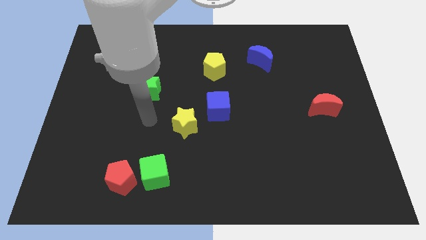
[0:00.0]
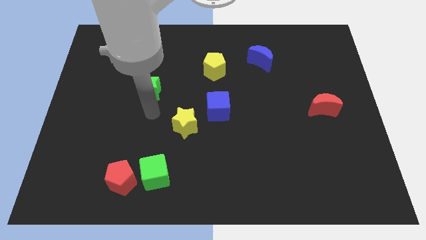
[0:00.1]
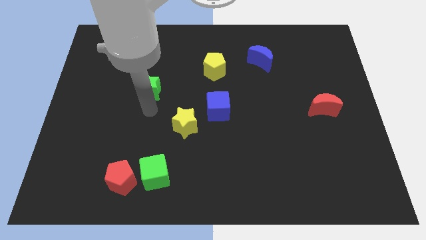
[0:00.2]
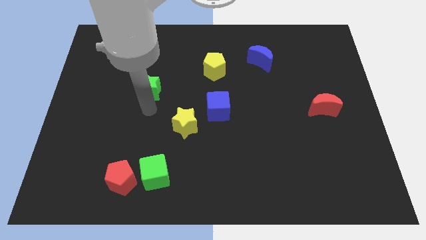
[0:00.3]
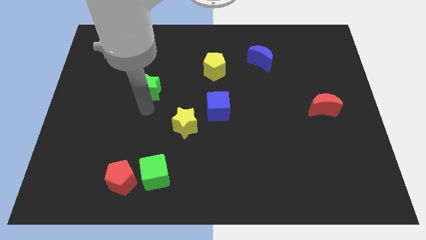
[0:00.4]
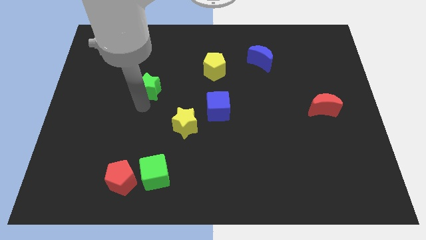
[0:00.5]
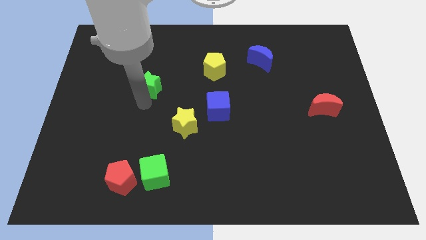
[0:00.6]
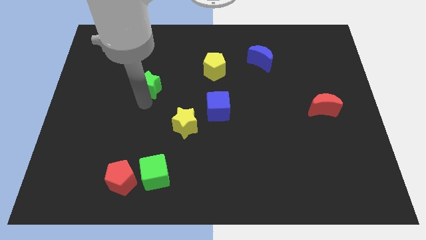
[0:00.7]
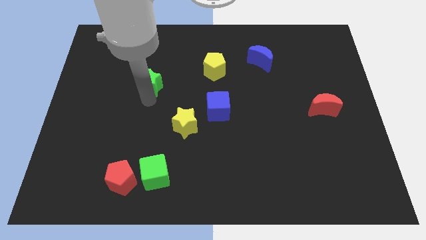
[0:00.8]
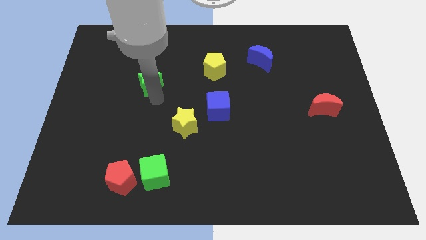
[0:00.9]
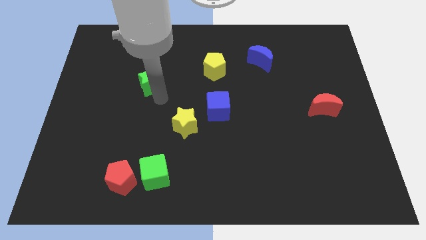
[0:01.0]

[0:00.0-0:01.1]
push the green star slightly to the top

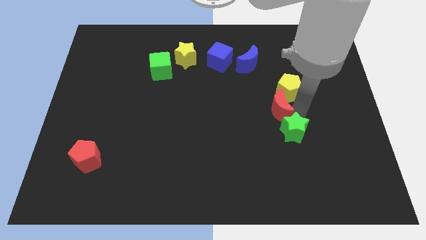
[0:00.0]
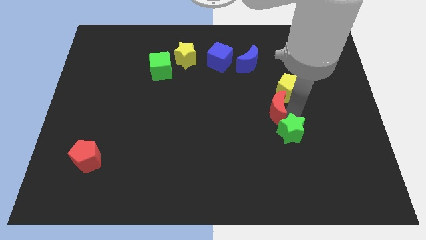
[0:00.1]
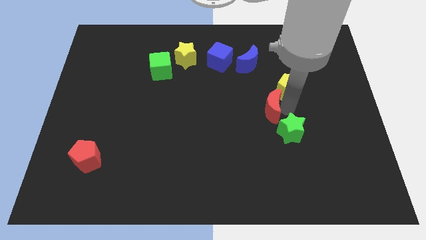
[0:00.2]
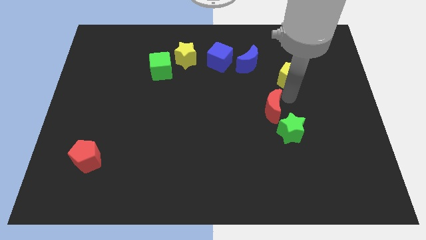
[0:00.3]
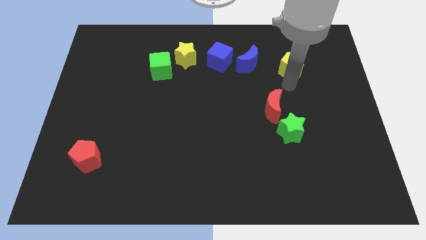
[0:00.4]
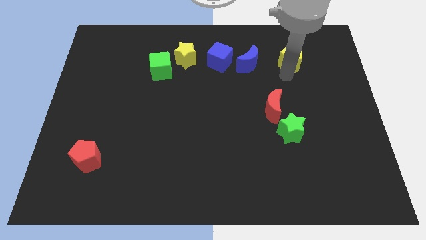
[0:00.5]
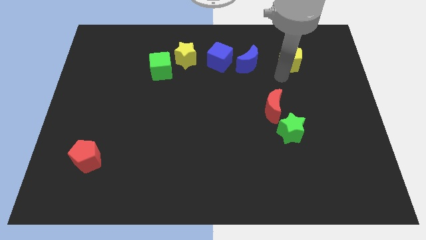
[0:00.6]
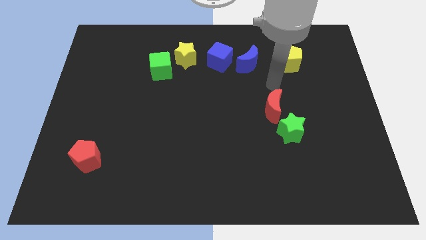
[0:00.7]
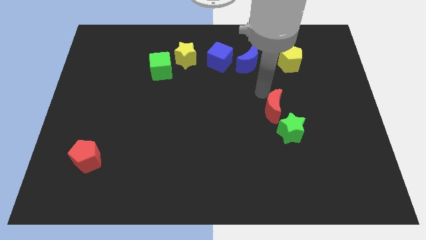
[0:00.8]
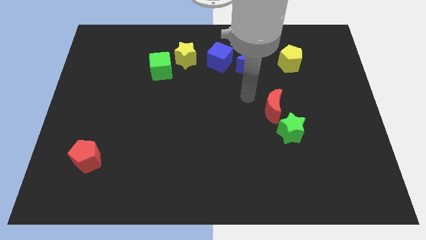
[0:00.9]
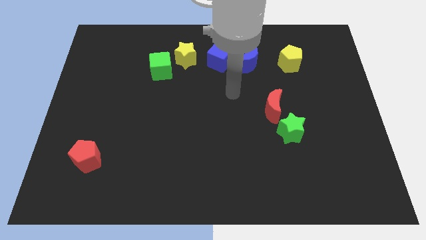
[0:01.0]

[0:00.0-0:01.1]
separate the yellow pentagon from the red moon

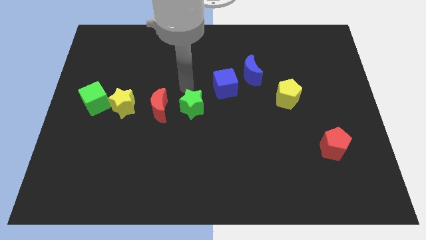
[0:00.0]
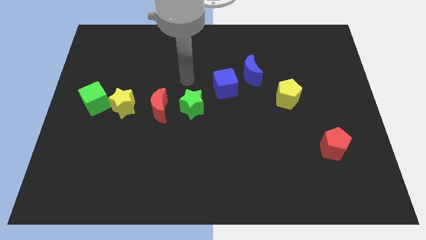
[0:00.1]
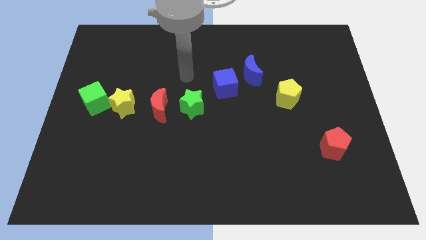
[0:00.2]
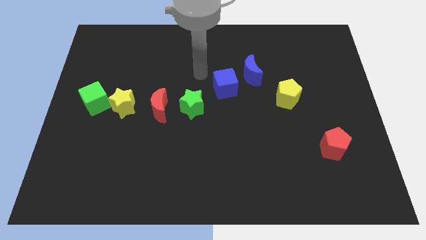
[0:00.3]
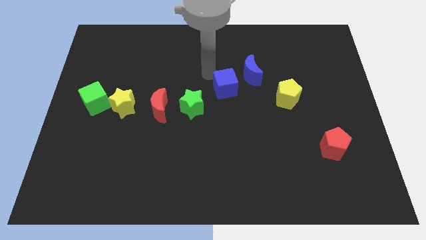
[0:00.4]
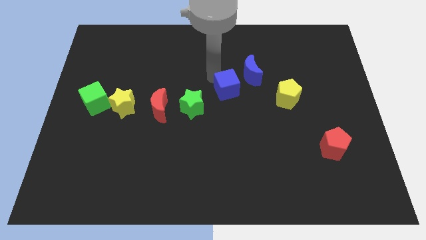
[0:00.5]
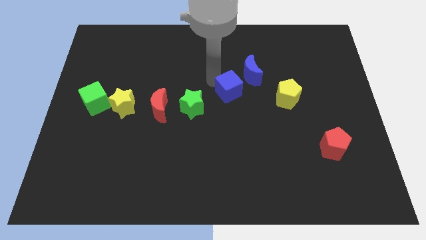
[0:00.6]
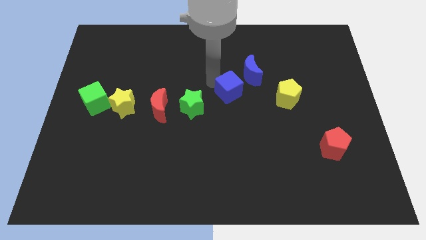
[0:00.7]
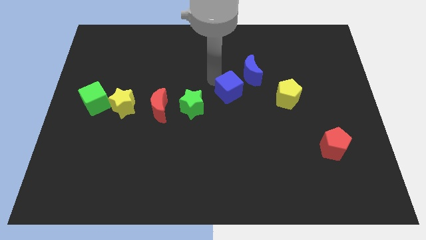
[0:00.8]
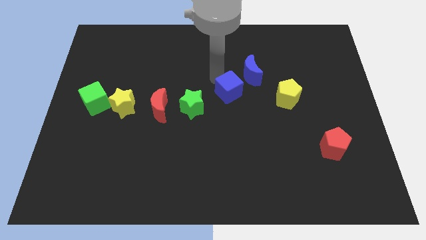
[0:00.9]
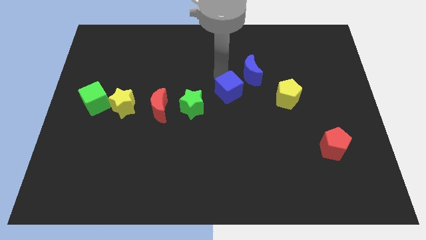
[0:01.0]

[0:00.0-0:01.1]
place the arm above the blue cube

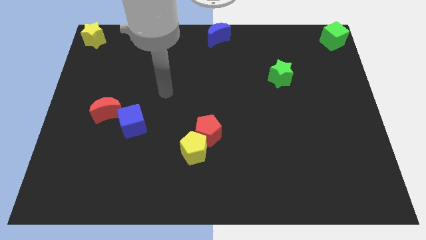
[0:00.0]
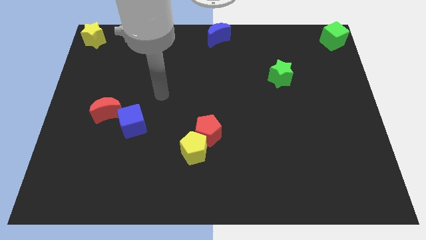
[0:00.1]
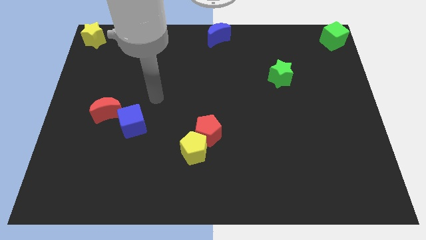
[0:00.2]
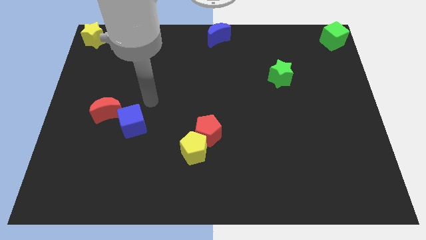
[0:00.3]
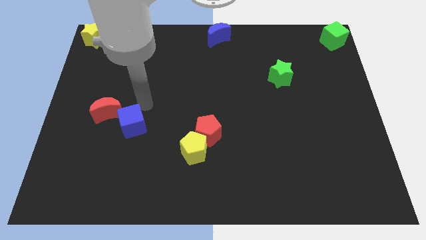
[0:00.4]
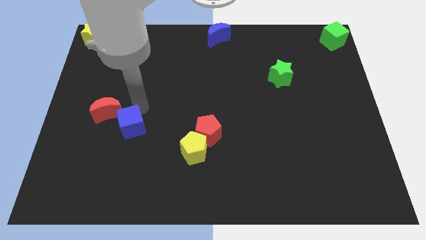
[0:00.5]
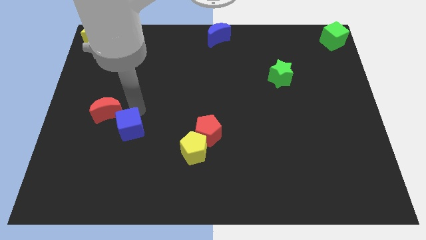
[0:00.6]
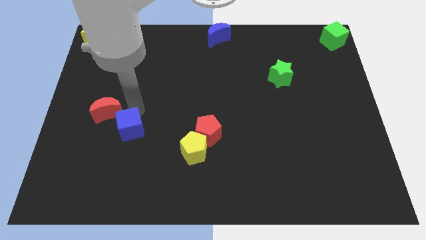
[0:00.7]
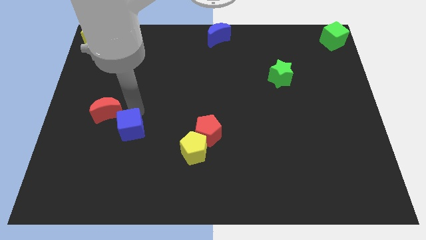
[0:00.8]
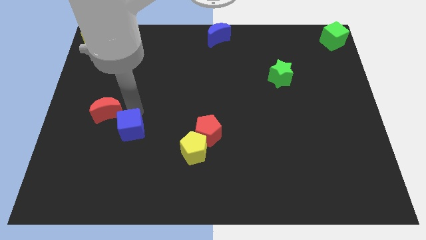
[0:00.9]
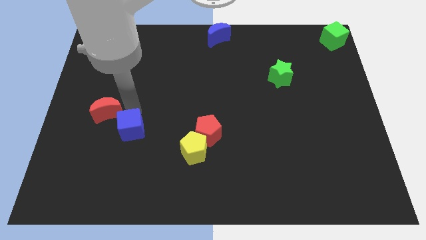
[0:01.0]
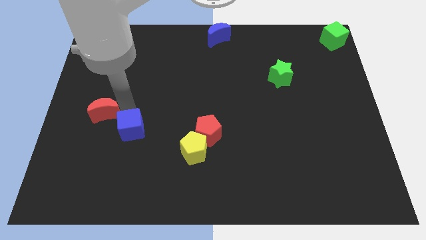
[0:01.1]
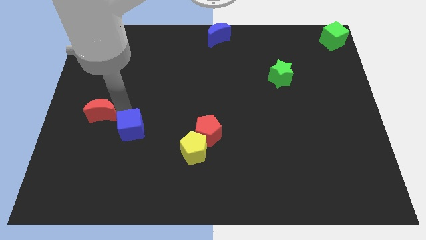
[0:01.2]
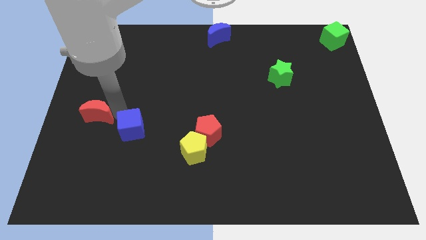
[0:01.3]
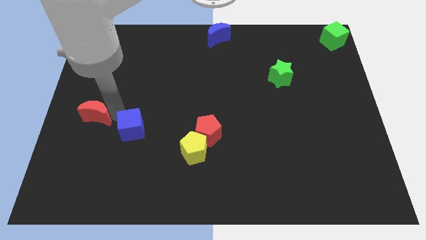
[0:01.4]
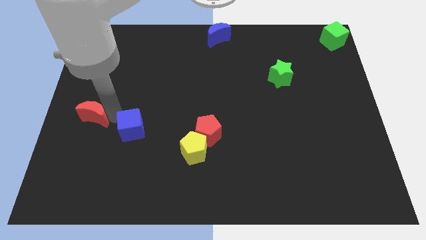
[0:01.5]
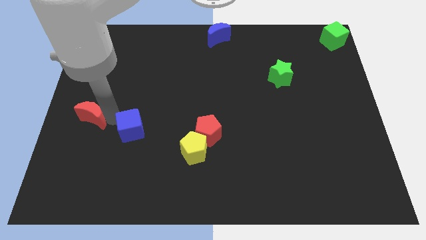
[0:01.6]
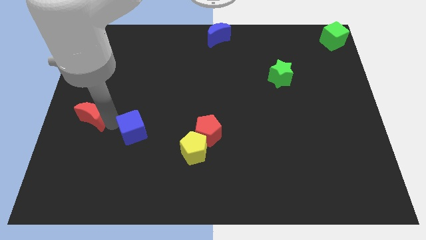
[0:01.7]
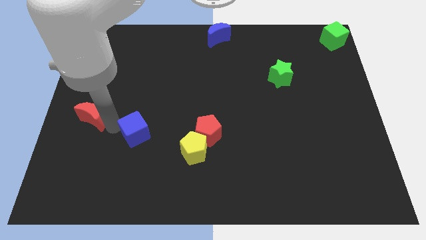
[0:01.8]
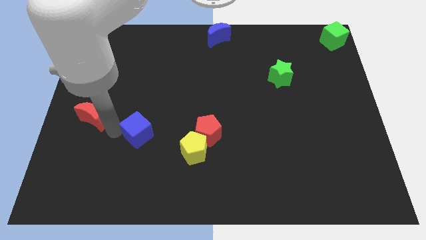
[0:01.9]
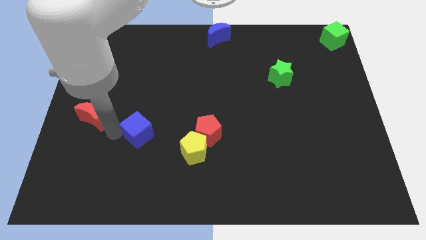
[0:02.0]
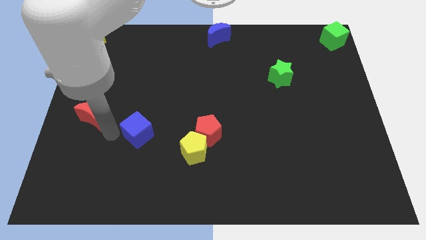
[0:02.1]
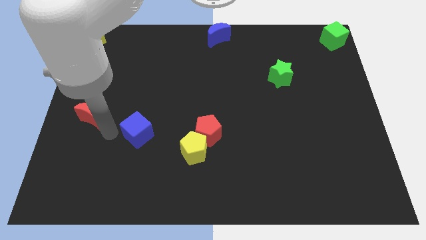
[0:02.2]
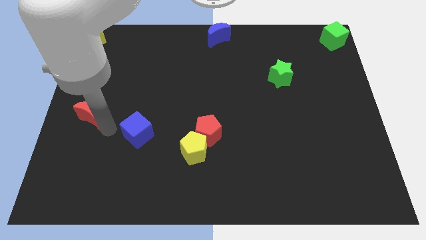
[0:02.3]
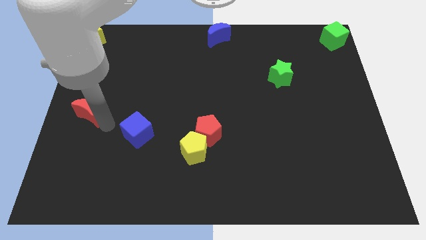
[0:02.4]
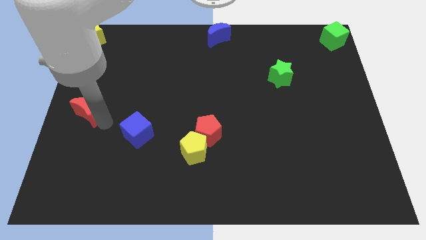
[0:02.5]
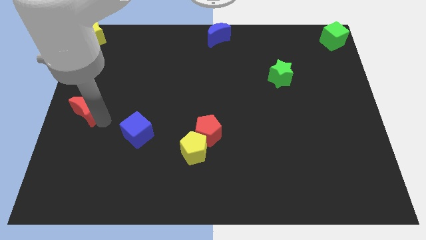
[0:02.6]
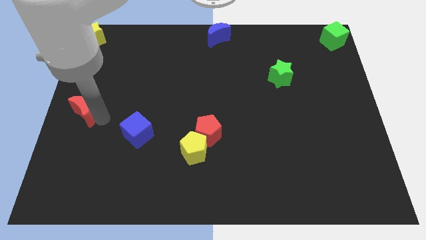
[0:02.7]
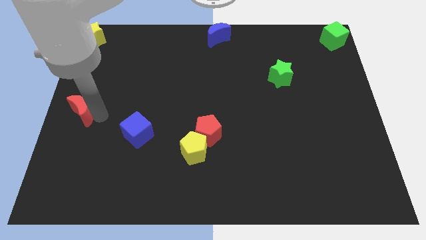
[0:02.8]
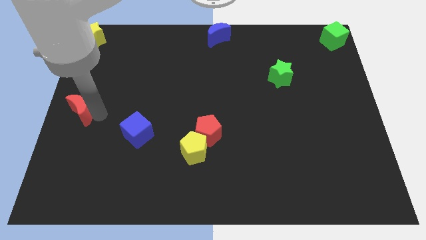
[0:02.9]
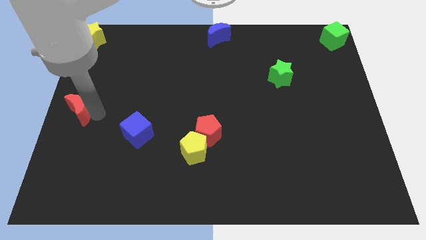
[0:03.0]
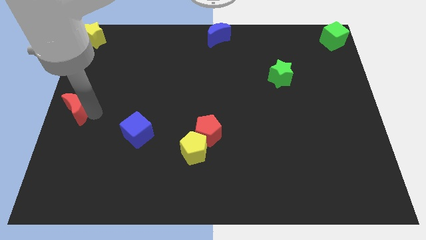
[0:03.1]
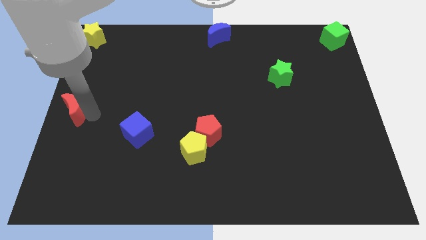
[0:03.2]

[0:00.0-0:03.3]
separate the red moon from the blue cube

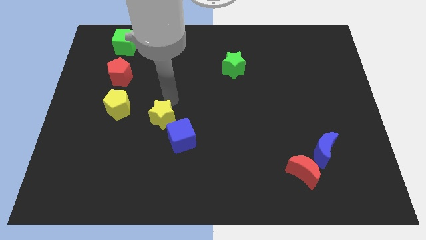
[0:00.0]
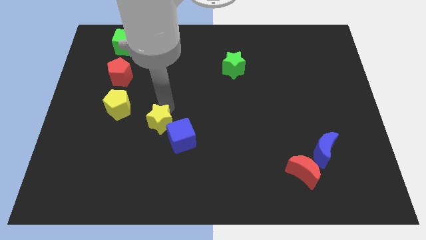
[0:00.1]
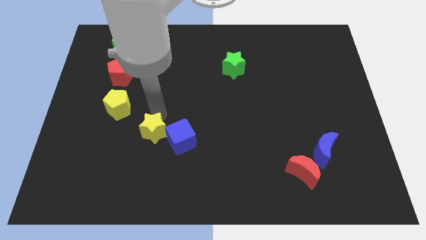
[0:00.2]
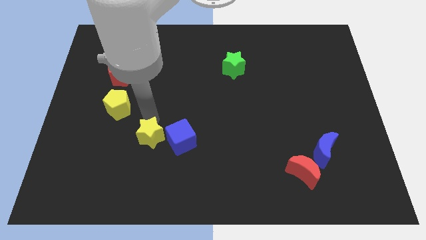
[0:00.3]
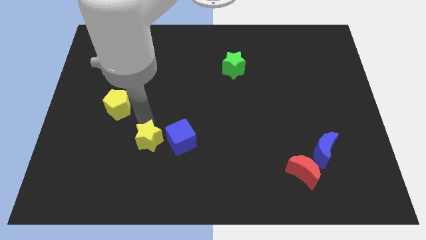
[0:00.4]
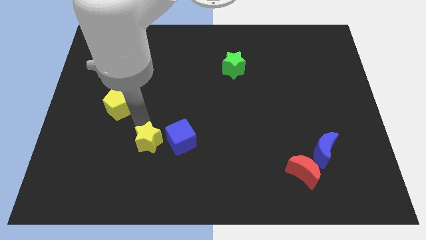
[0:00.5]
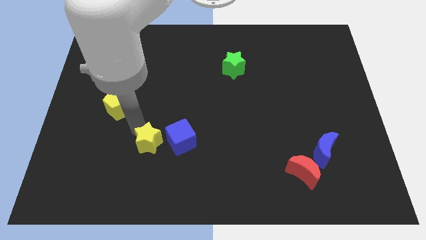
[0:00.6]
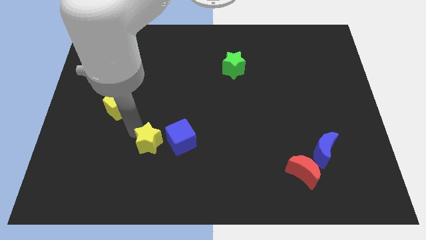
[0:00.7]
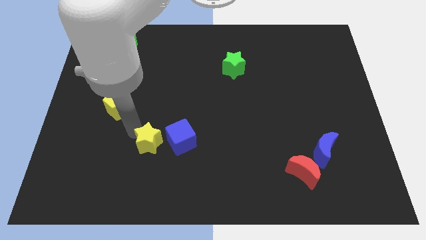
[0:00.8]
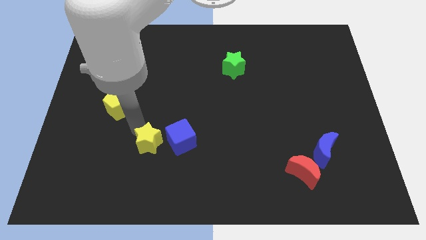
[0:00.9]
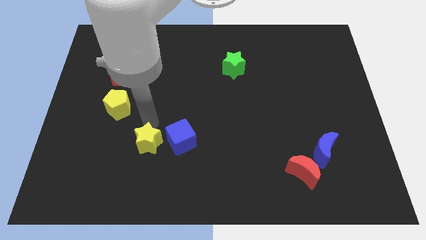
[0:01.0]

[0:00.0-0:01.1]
move the yellow star to the left of the blue cube

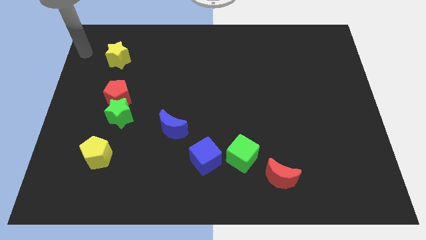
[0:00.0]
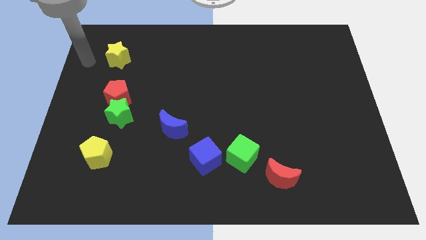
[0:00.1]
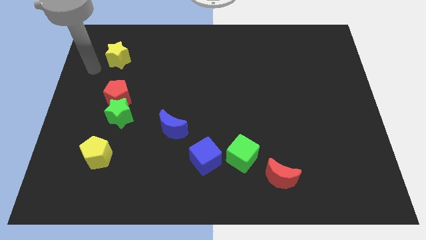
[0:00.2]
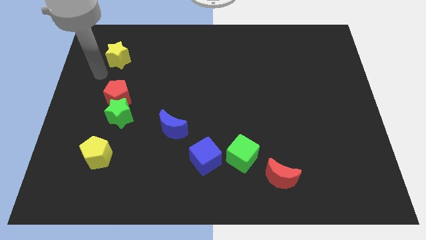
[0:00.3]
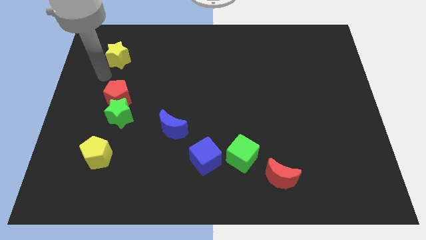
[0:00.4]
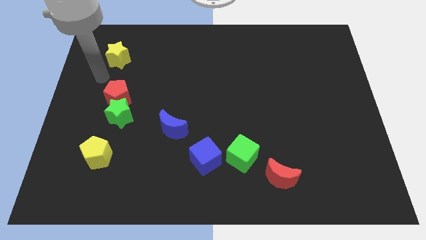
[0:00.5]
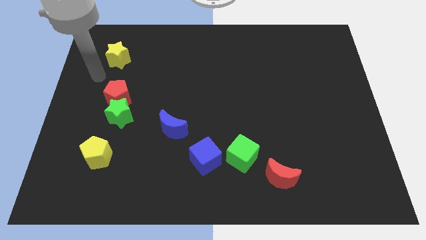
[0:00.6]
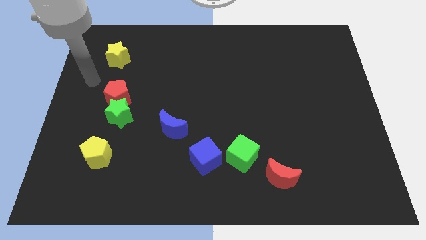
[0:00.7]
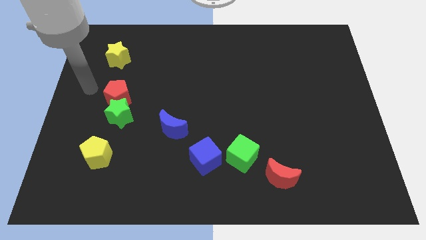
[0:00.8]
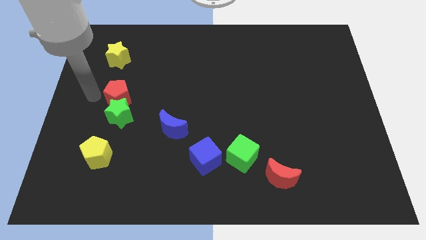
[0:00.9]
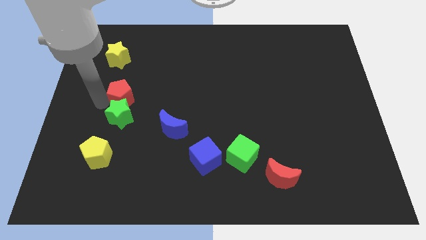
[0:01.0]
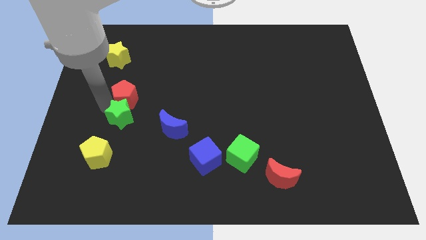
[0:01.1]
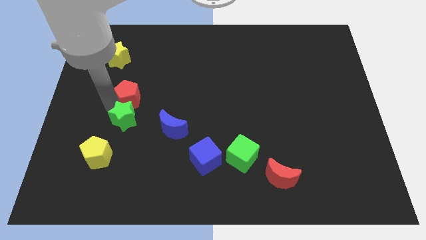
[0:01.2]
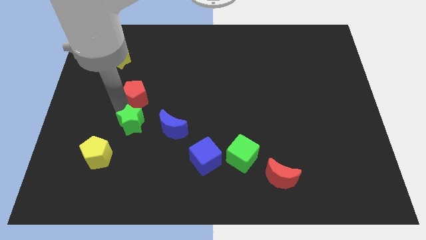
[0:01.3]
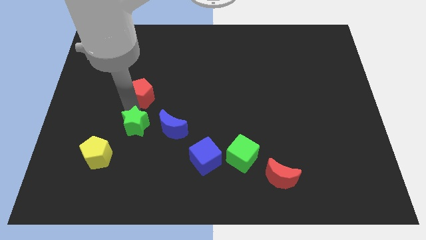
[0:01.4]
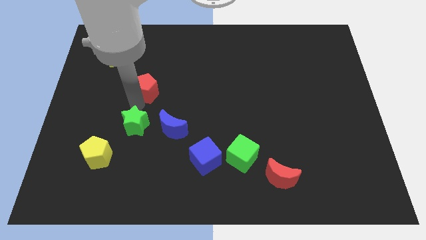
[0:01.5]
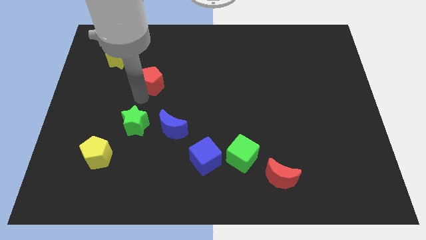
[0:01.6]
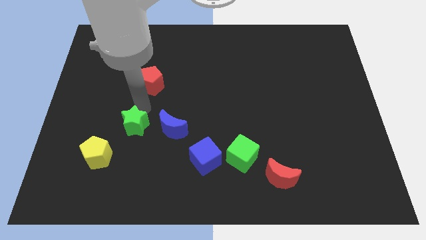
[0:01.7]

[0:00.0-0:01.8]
separate the red pentagon and the green star
